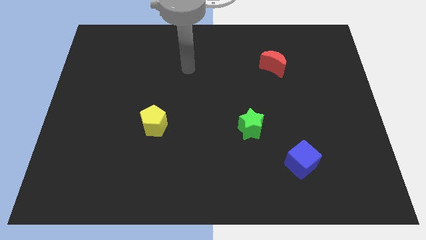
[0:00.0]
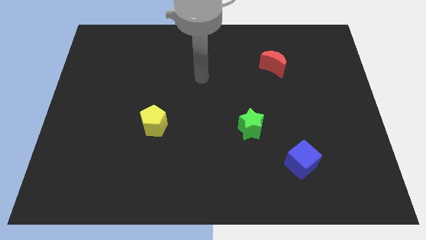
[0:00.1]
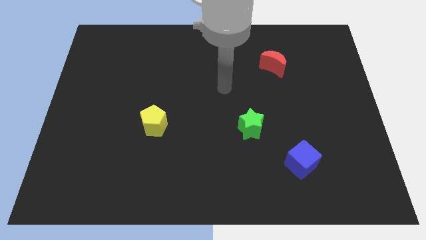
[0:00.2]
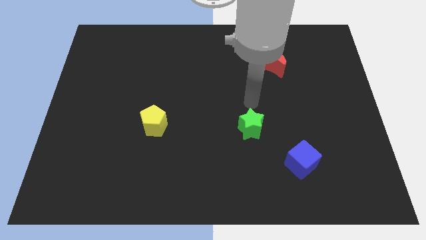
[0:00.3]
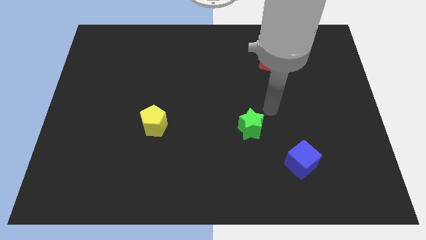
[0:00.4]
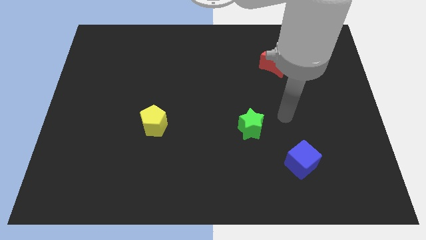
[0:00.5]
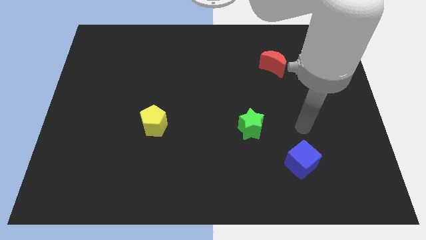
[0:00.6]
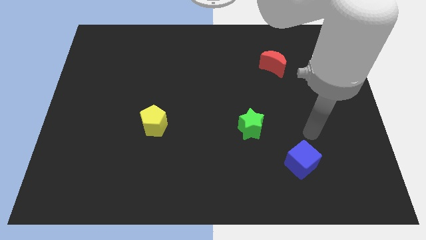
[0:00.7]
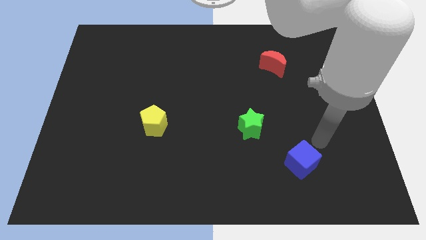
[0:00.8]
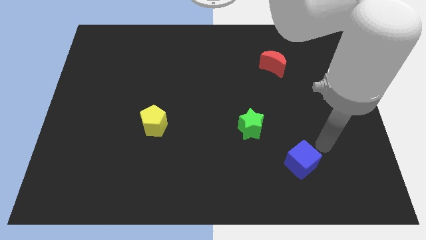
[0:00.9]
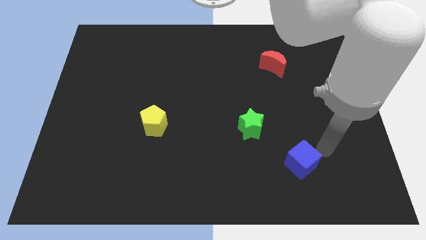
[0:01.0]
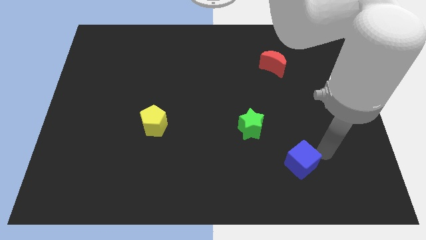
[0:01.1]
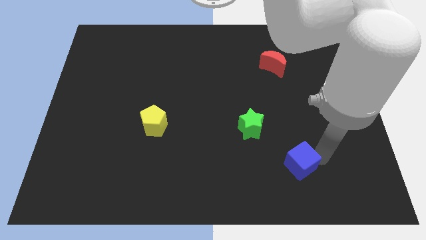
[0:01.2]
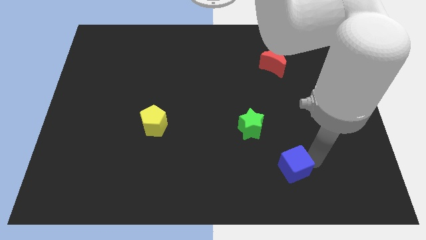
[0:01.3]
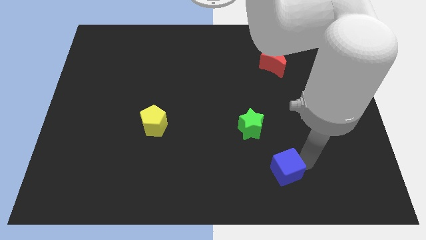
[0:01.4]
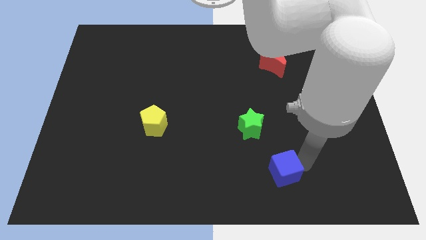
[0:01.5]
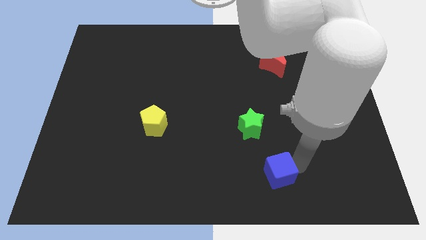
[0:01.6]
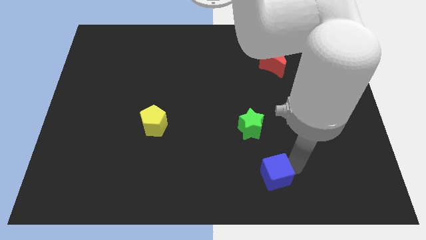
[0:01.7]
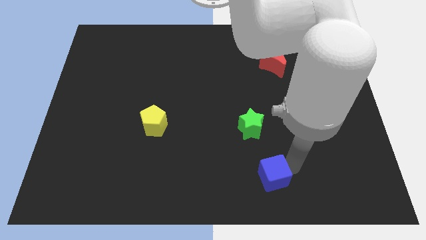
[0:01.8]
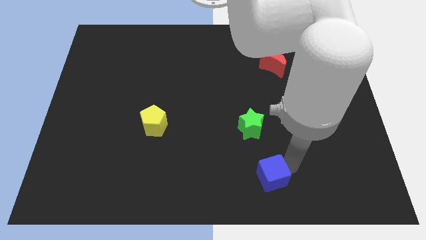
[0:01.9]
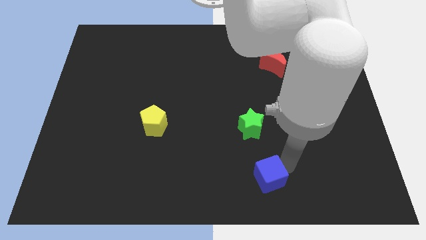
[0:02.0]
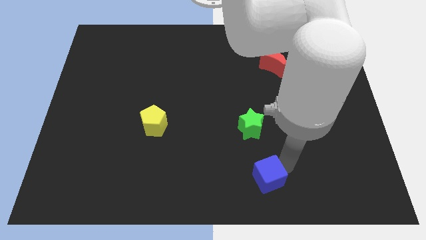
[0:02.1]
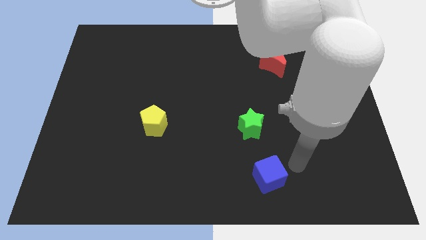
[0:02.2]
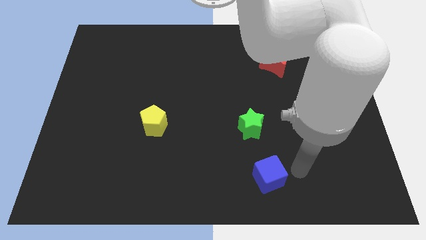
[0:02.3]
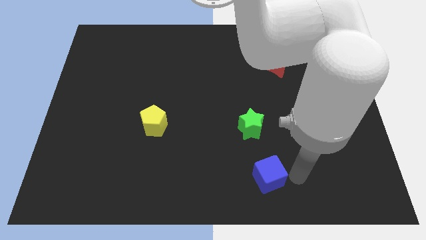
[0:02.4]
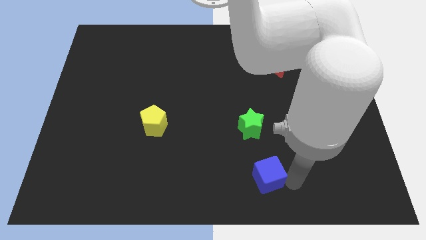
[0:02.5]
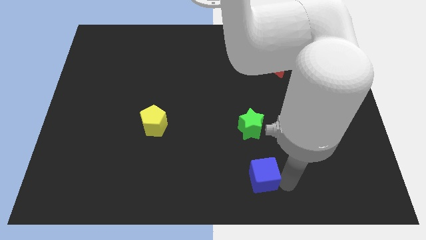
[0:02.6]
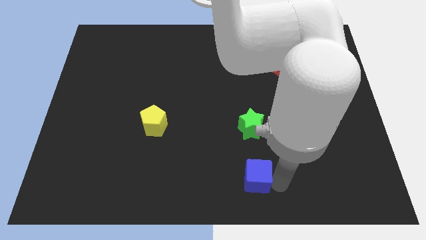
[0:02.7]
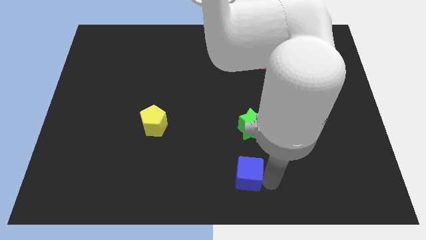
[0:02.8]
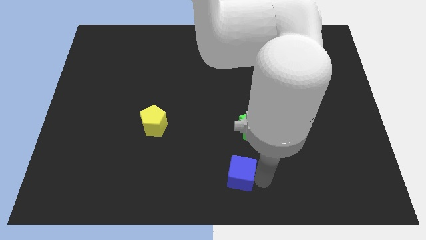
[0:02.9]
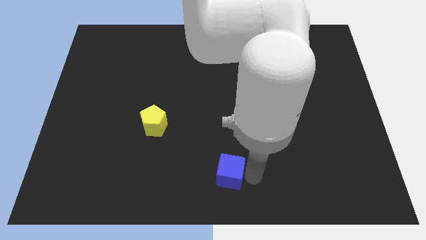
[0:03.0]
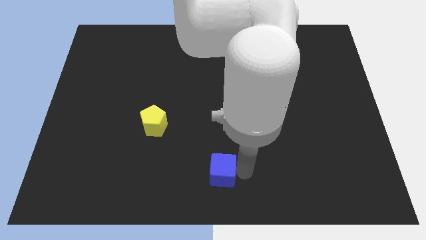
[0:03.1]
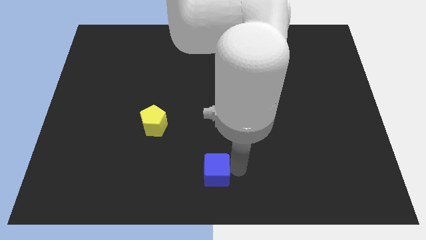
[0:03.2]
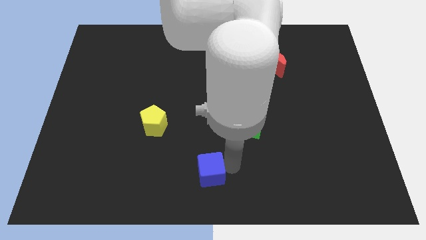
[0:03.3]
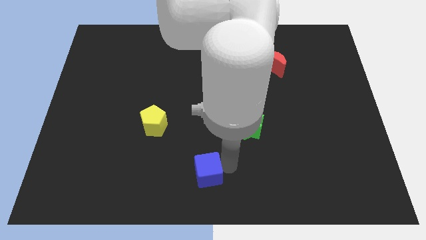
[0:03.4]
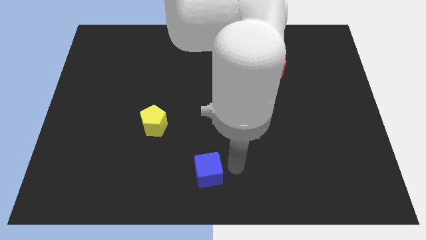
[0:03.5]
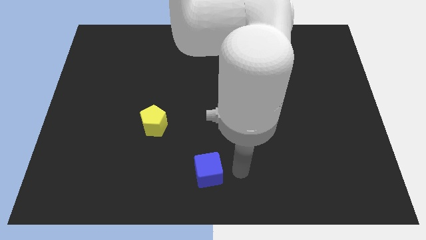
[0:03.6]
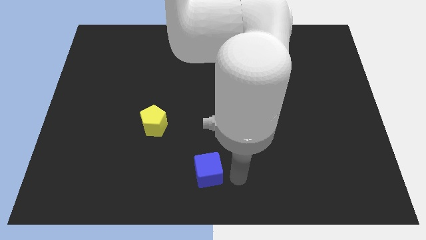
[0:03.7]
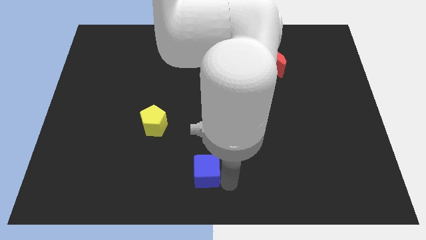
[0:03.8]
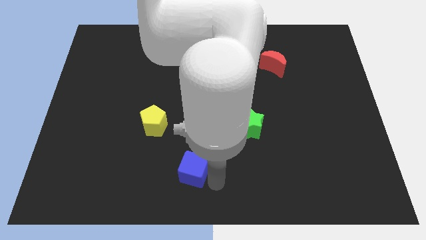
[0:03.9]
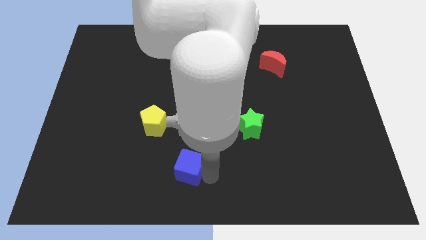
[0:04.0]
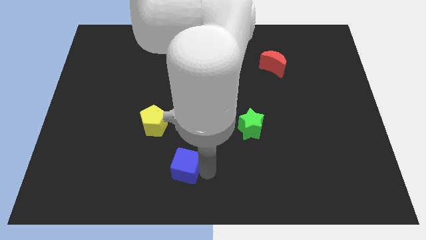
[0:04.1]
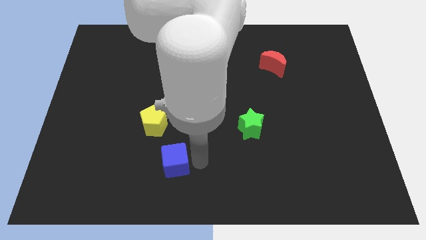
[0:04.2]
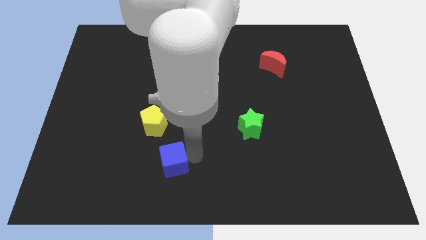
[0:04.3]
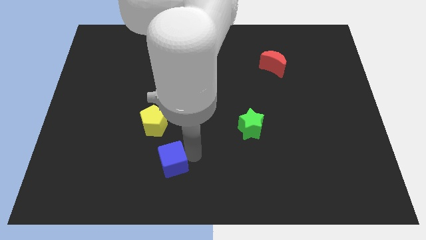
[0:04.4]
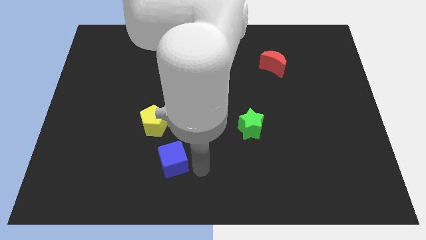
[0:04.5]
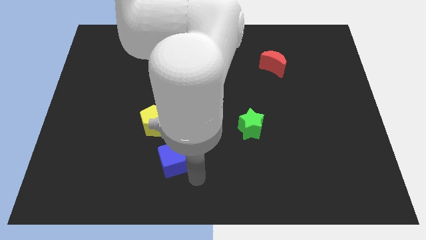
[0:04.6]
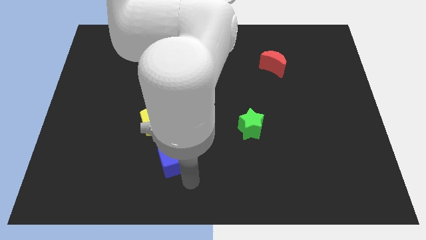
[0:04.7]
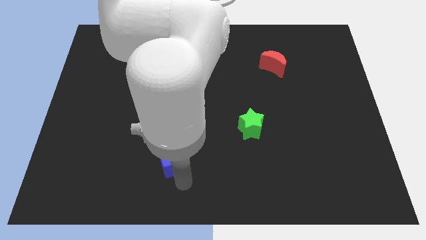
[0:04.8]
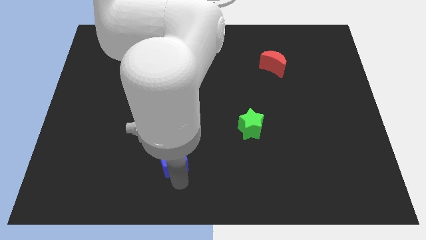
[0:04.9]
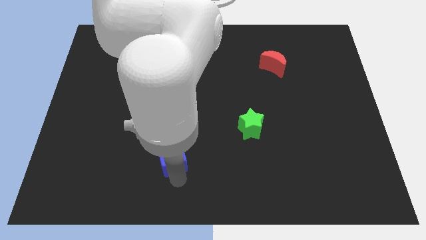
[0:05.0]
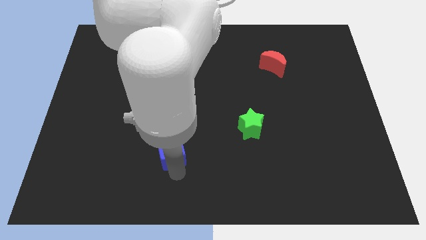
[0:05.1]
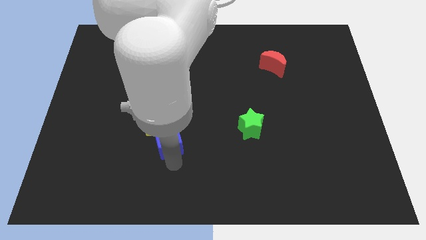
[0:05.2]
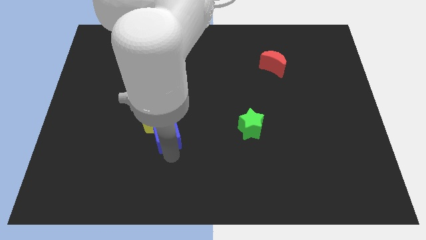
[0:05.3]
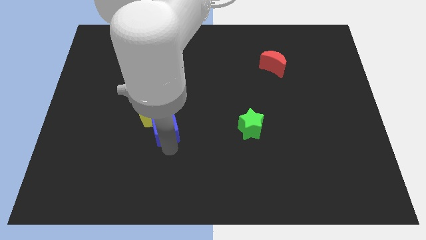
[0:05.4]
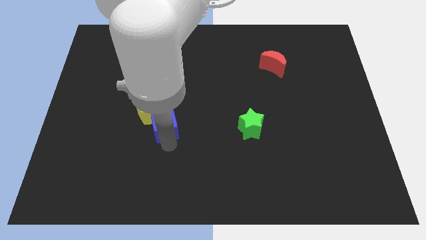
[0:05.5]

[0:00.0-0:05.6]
push the blue cube close to the yellow block

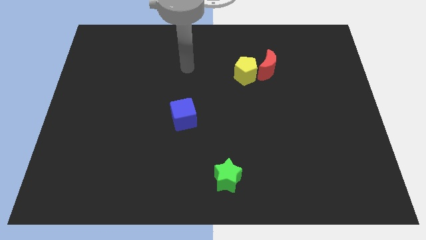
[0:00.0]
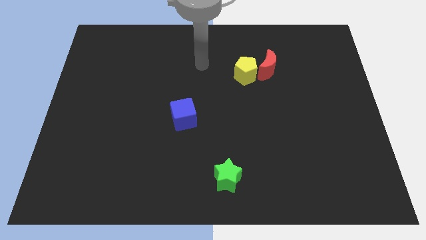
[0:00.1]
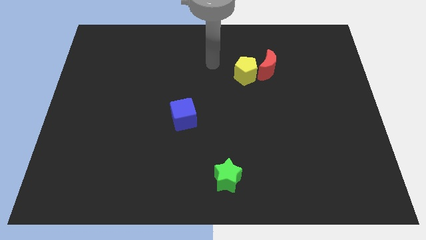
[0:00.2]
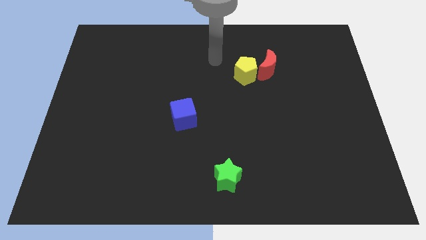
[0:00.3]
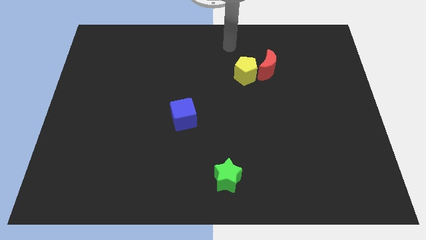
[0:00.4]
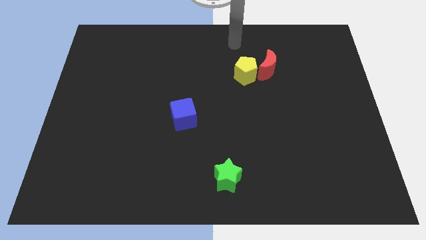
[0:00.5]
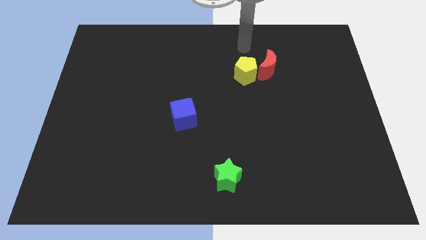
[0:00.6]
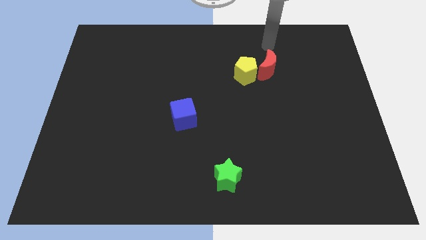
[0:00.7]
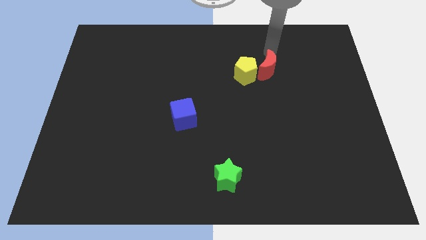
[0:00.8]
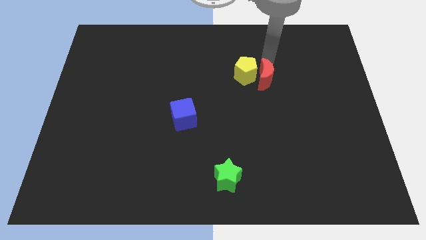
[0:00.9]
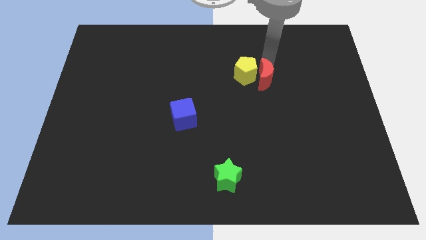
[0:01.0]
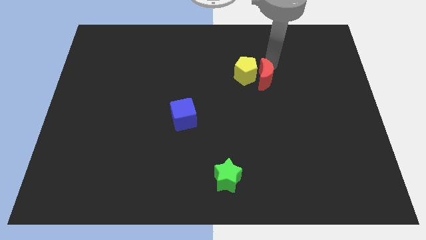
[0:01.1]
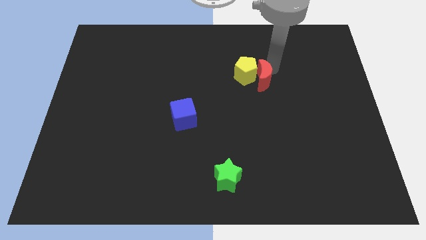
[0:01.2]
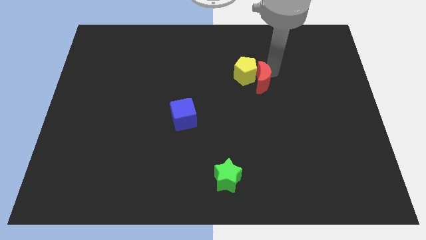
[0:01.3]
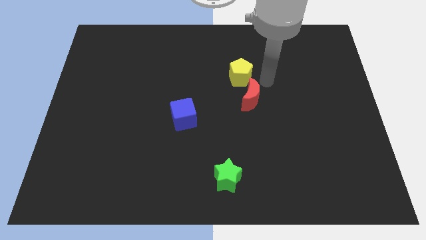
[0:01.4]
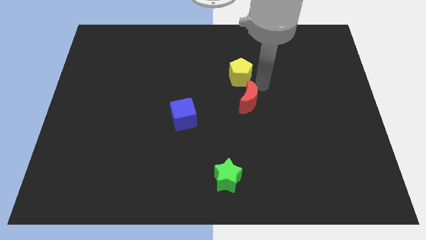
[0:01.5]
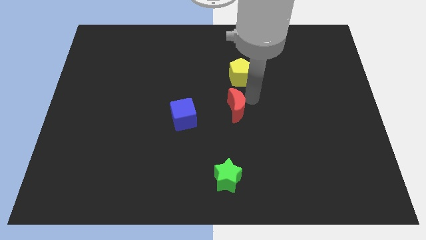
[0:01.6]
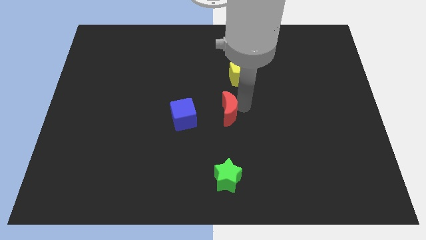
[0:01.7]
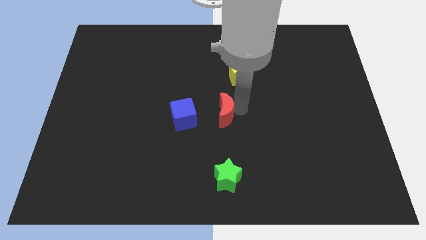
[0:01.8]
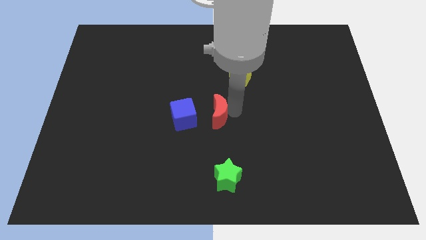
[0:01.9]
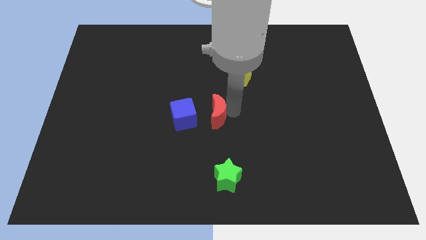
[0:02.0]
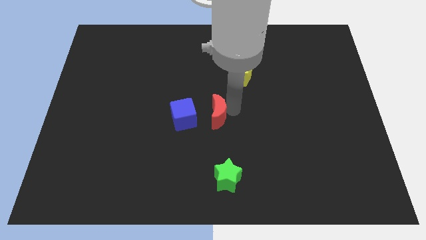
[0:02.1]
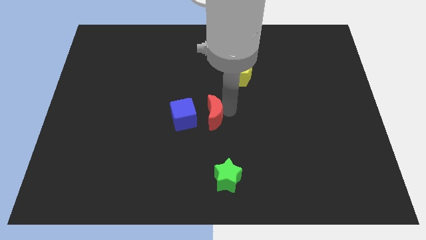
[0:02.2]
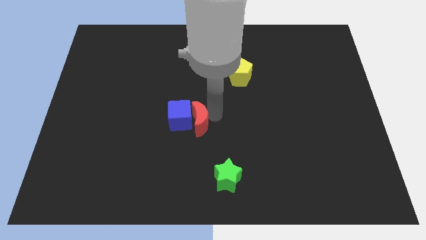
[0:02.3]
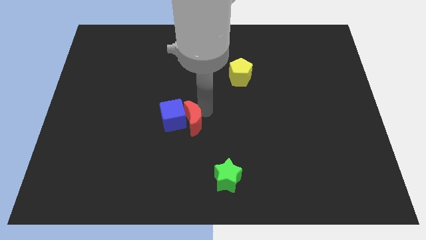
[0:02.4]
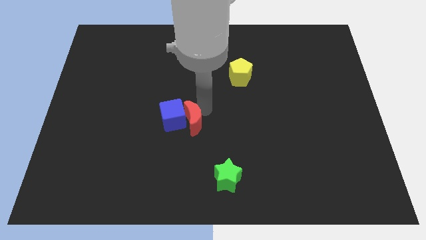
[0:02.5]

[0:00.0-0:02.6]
put the moon next to the cube

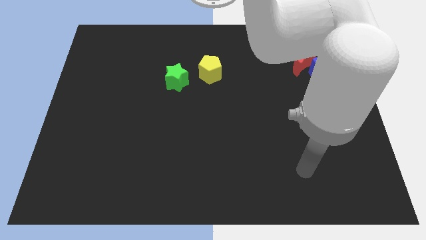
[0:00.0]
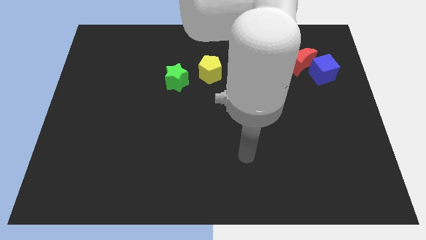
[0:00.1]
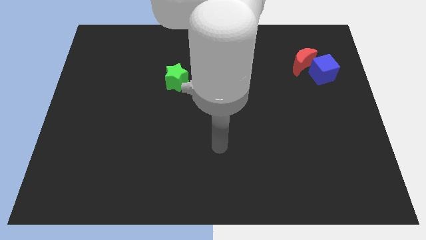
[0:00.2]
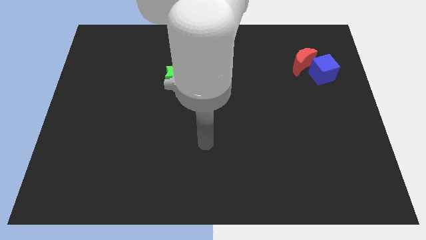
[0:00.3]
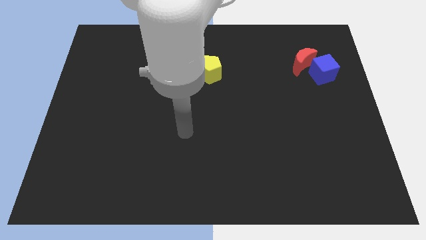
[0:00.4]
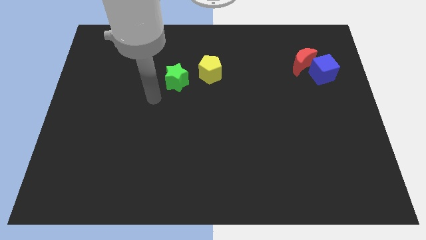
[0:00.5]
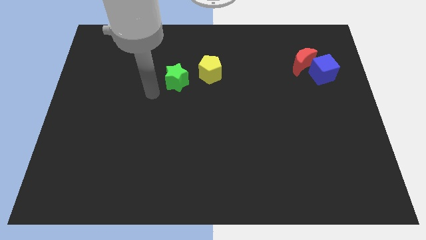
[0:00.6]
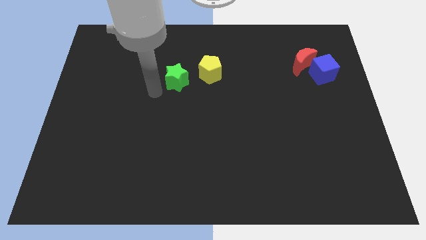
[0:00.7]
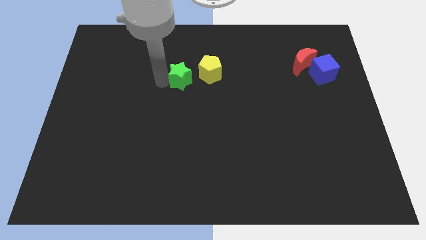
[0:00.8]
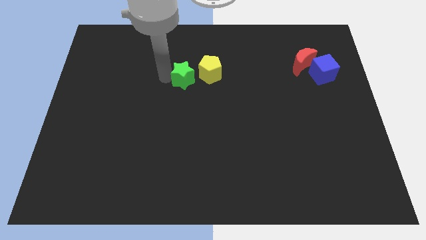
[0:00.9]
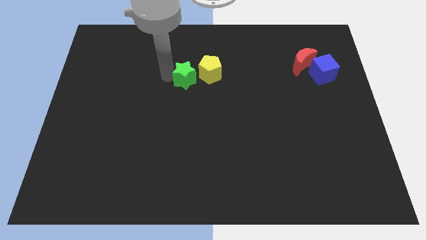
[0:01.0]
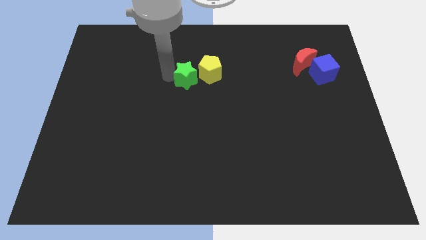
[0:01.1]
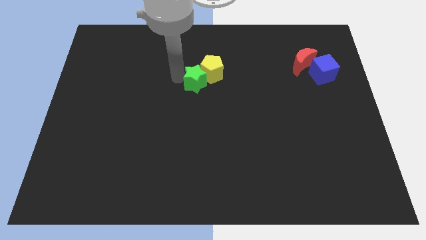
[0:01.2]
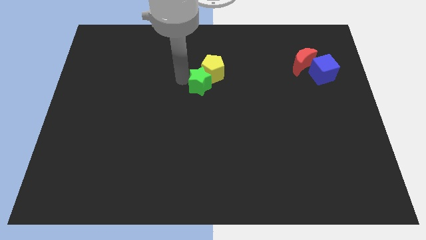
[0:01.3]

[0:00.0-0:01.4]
slide the green block towards the pentagon
